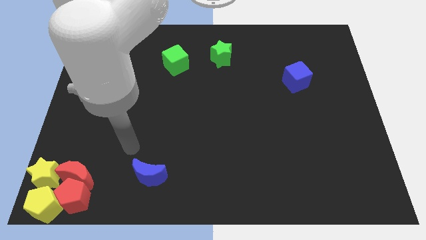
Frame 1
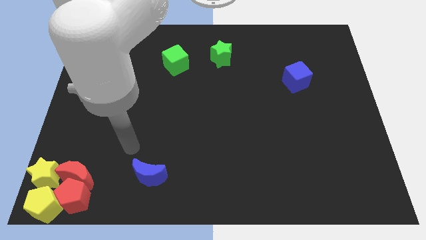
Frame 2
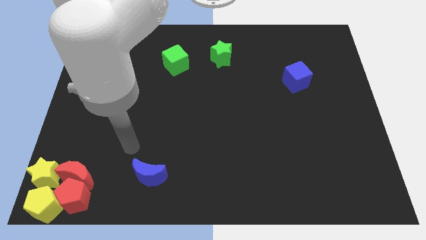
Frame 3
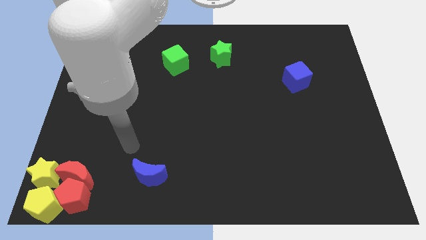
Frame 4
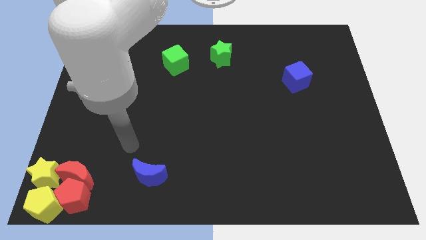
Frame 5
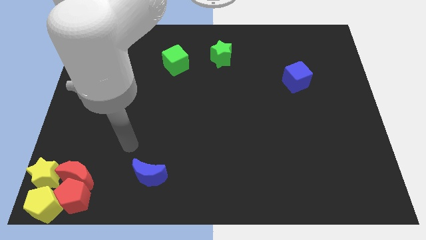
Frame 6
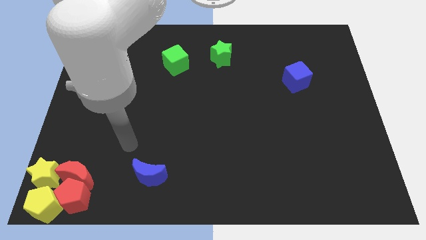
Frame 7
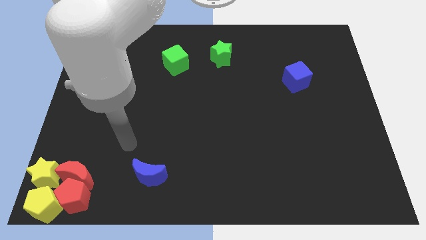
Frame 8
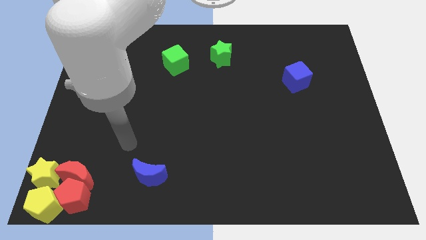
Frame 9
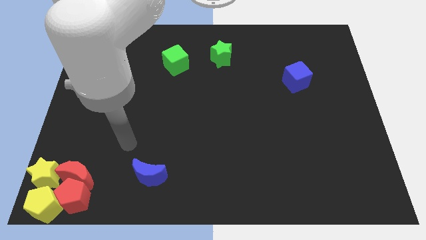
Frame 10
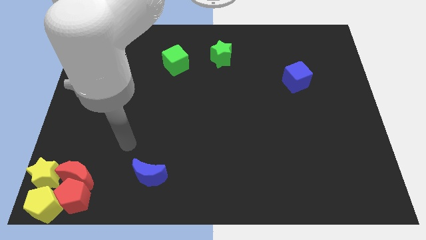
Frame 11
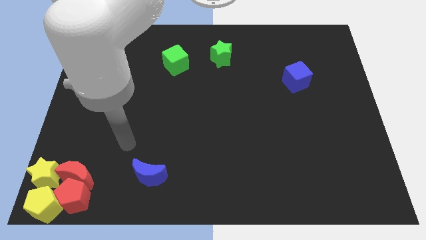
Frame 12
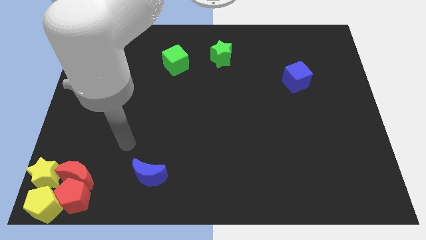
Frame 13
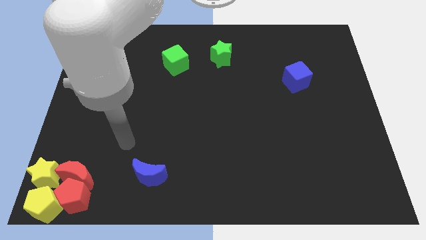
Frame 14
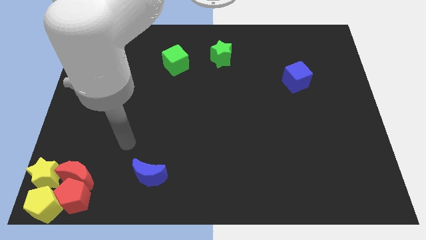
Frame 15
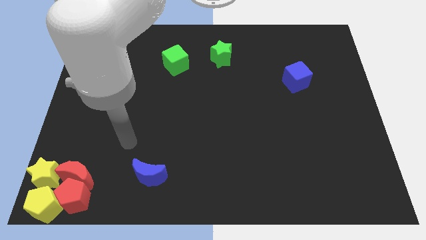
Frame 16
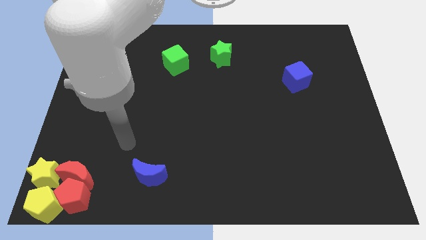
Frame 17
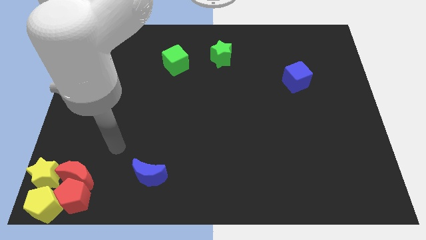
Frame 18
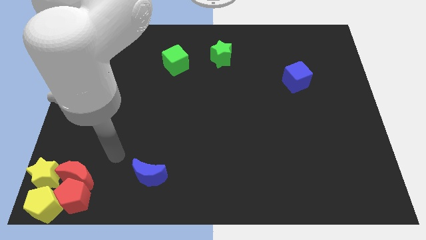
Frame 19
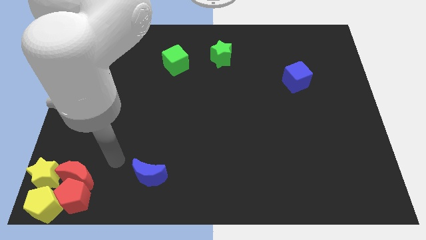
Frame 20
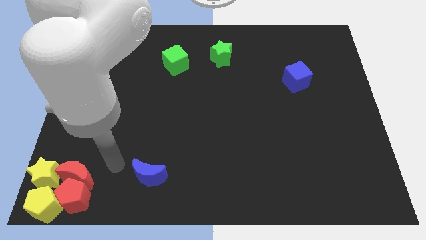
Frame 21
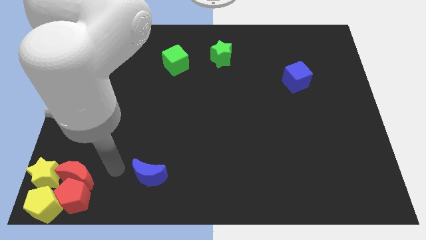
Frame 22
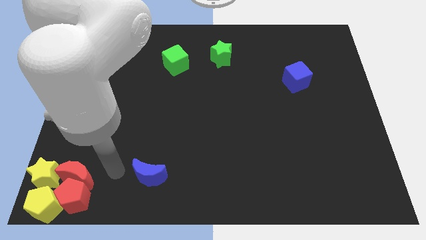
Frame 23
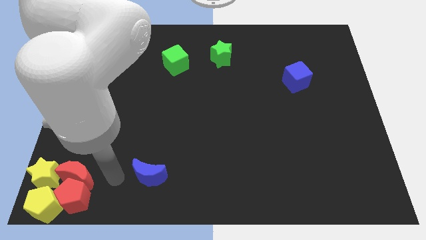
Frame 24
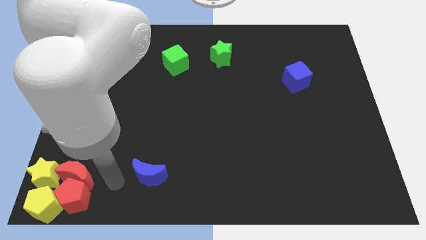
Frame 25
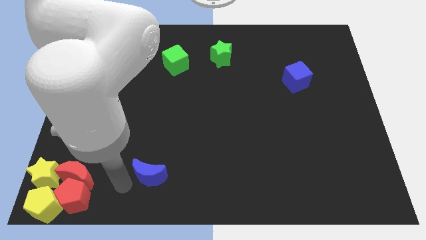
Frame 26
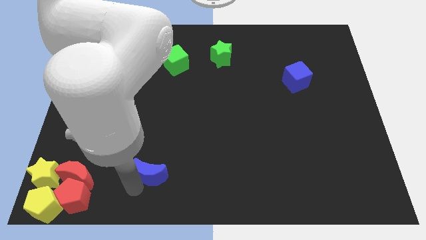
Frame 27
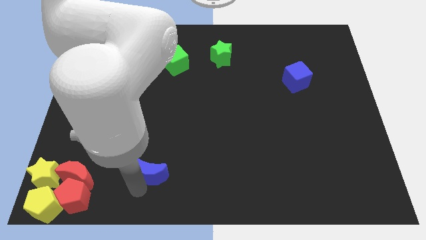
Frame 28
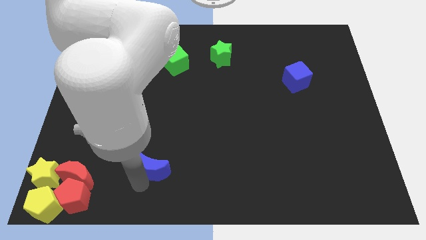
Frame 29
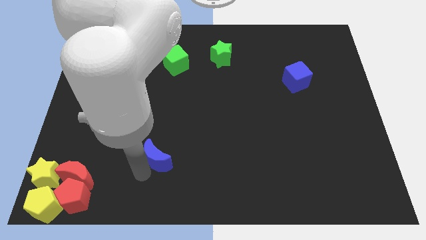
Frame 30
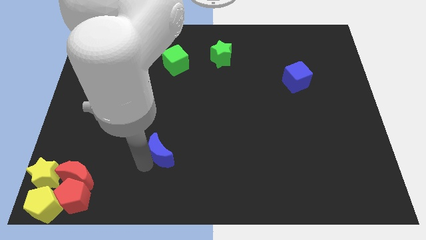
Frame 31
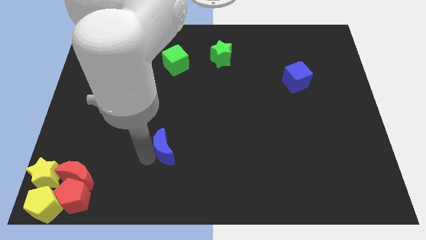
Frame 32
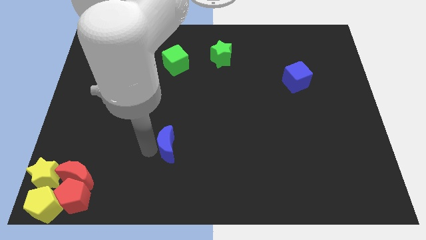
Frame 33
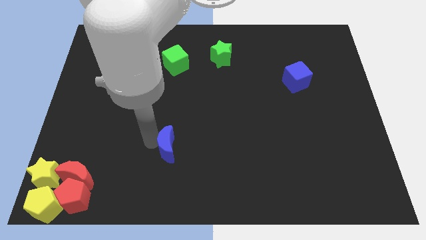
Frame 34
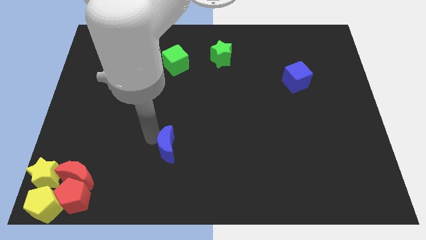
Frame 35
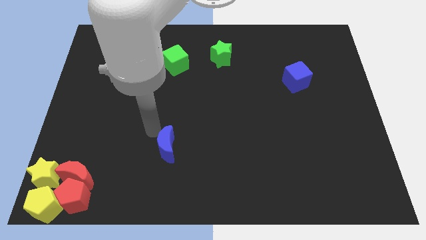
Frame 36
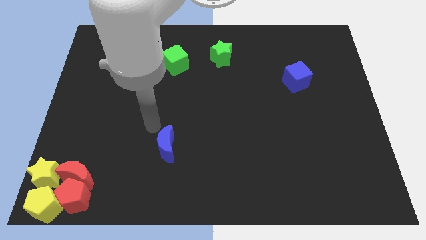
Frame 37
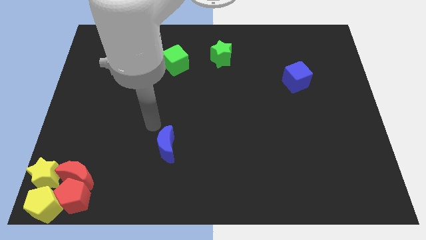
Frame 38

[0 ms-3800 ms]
move blue moon upwards

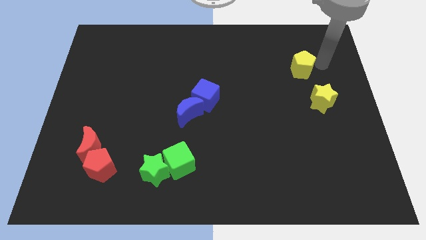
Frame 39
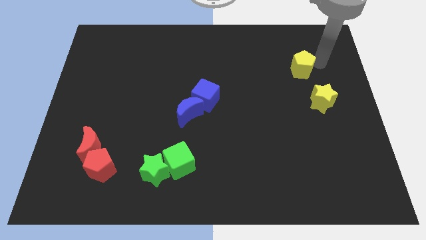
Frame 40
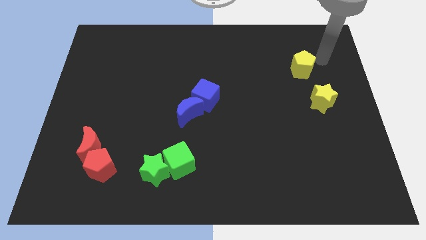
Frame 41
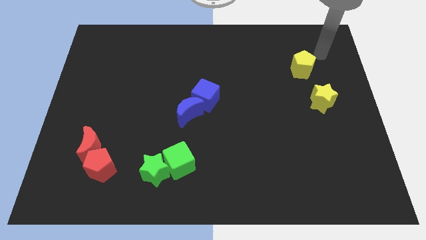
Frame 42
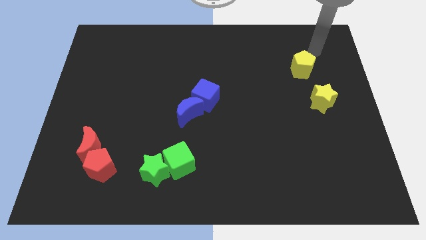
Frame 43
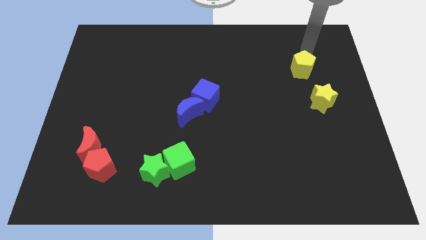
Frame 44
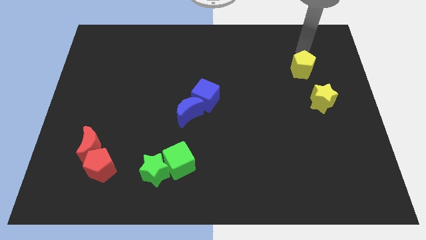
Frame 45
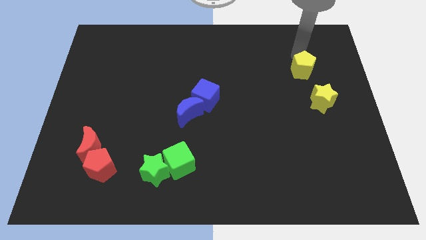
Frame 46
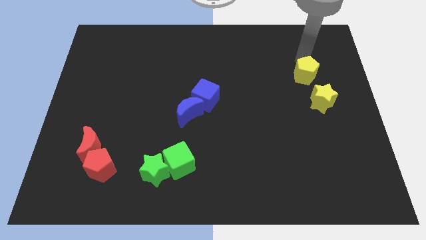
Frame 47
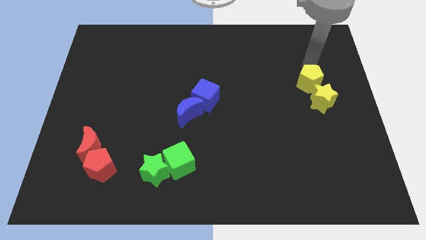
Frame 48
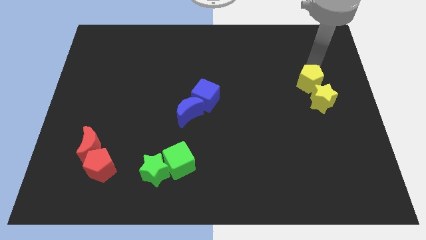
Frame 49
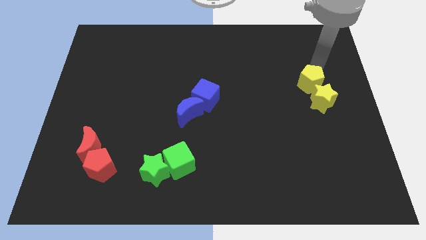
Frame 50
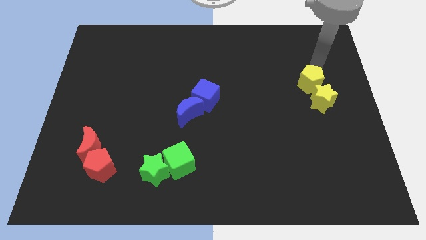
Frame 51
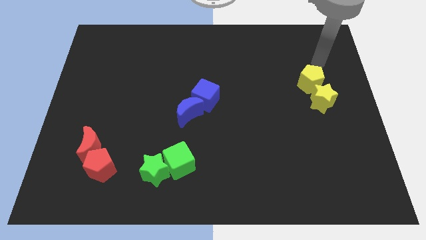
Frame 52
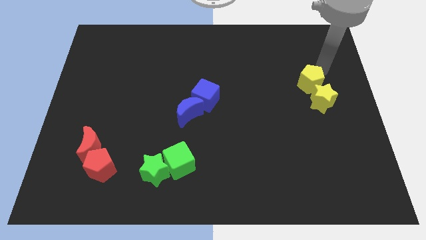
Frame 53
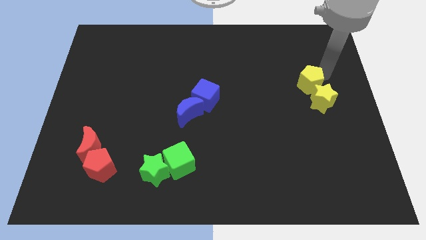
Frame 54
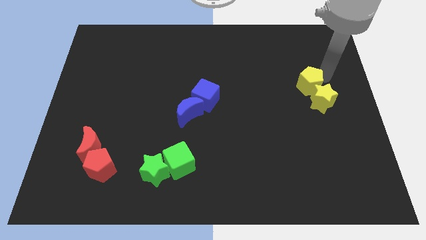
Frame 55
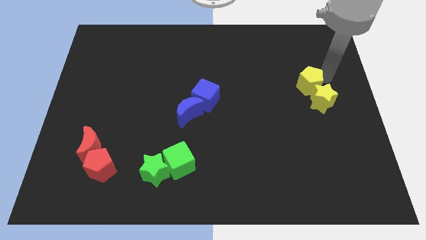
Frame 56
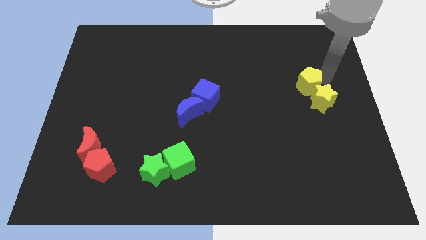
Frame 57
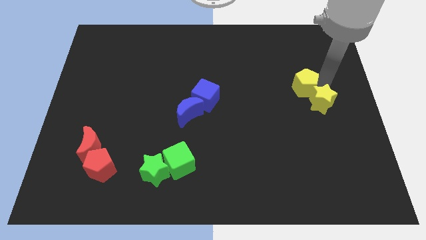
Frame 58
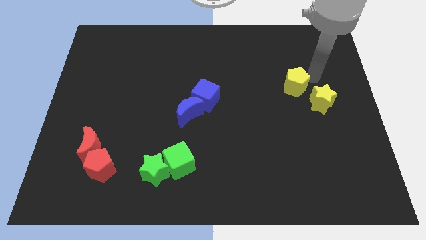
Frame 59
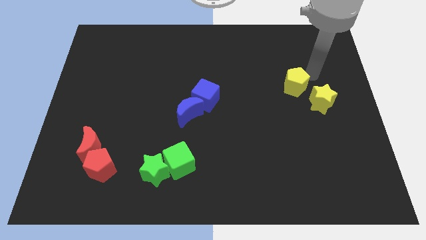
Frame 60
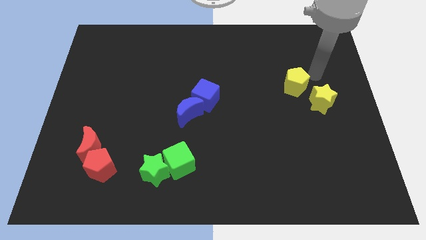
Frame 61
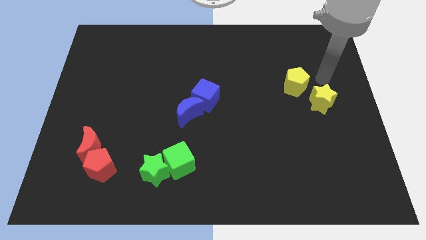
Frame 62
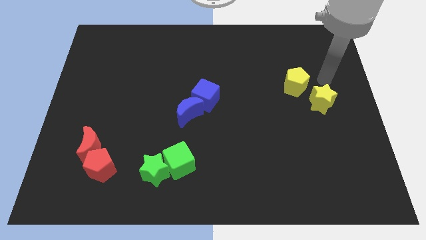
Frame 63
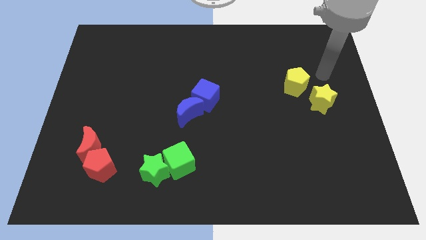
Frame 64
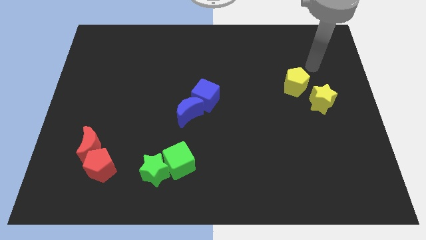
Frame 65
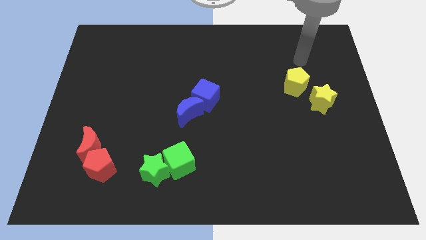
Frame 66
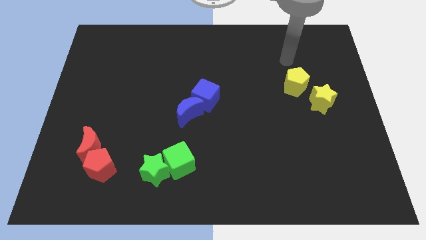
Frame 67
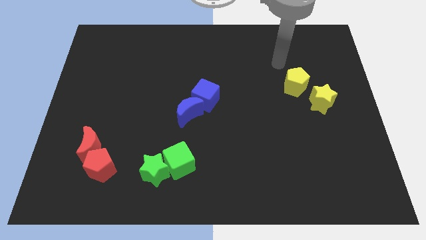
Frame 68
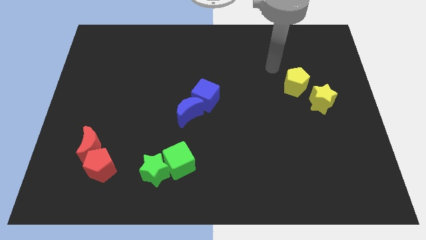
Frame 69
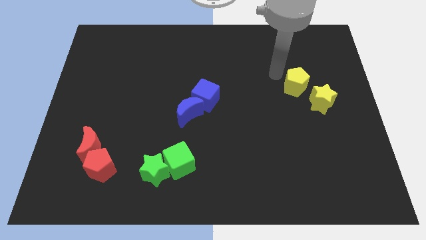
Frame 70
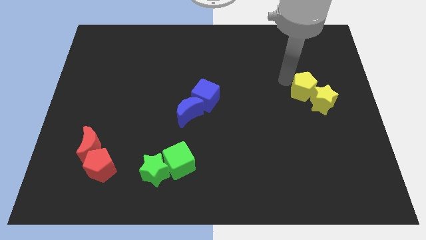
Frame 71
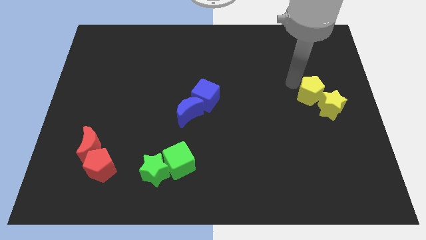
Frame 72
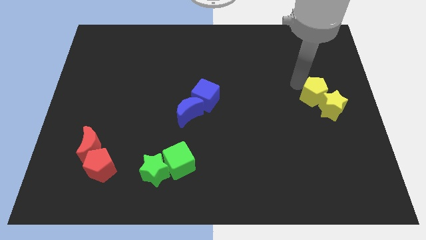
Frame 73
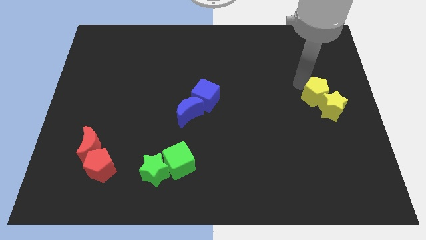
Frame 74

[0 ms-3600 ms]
push the yellow pentagon into the yellow star

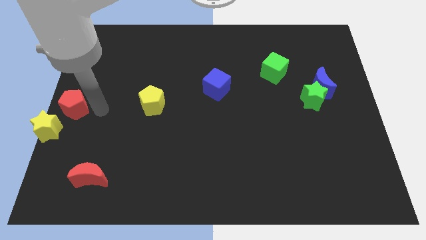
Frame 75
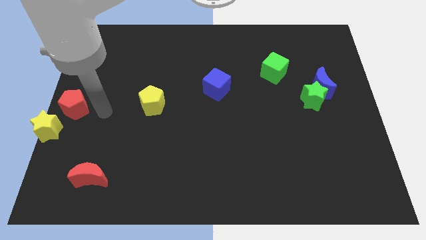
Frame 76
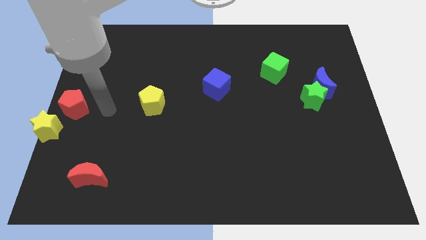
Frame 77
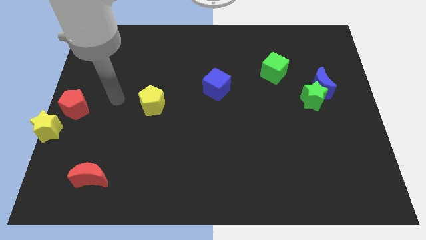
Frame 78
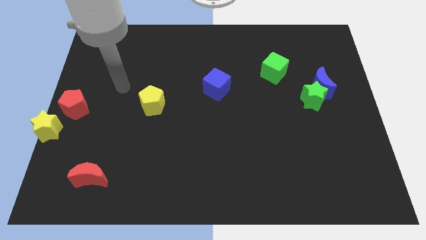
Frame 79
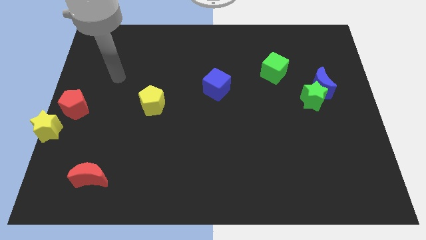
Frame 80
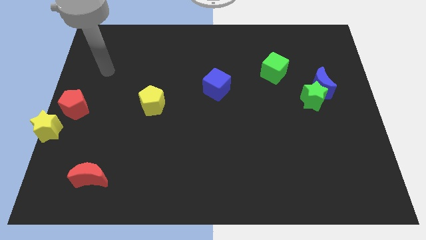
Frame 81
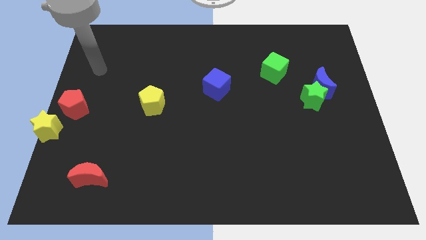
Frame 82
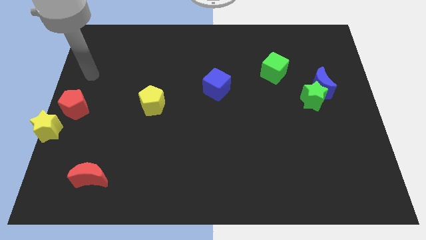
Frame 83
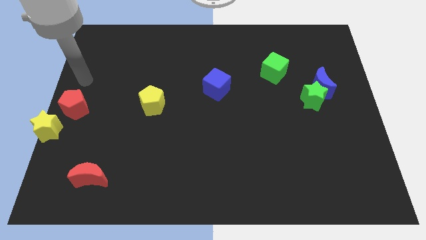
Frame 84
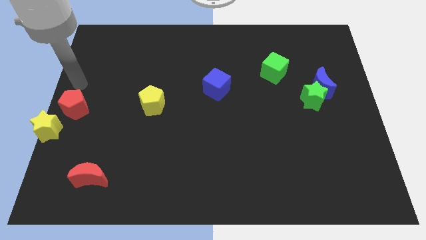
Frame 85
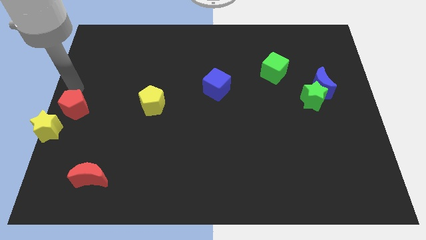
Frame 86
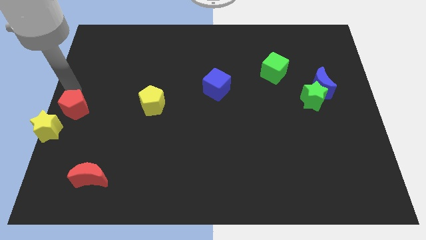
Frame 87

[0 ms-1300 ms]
place your arm above red pentagon

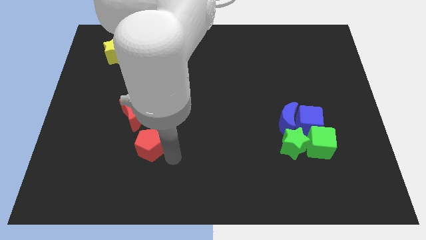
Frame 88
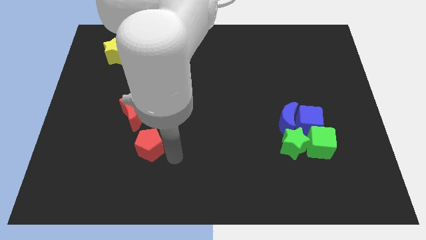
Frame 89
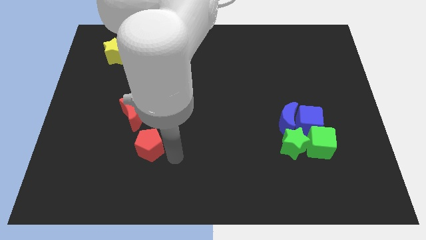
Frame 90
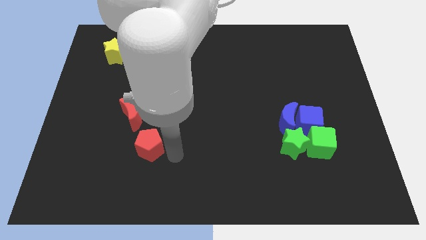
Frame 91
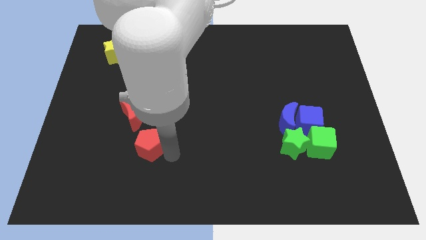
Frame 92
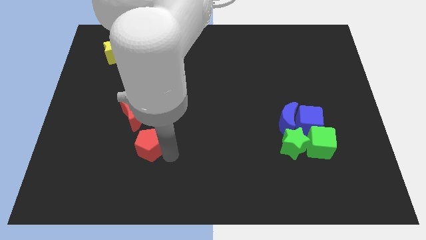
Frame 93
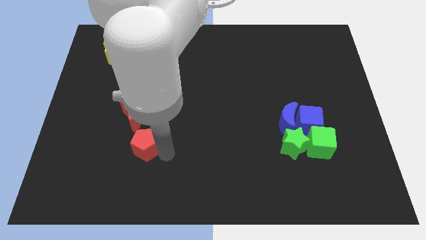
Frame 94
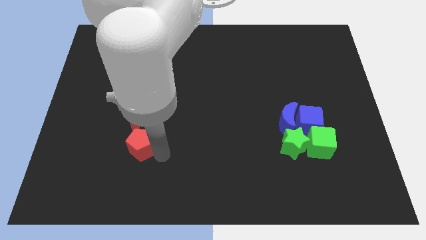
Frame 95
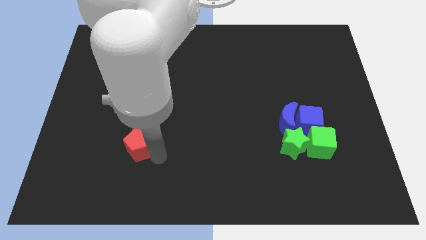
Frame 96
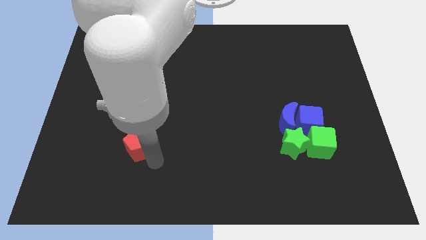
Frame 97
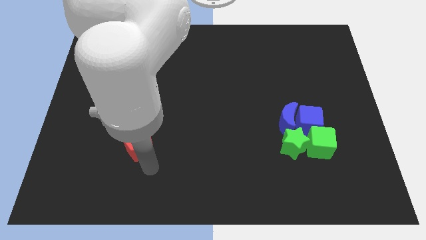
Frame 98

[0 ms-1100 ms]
move the red pentagon to the bottom of the red crescent
